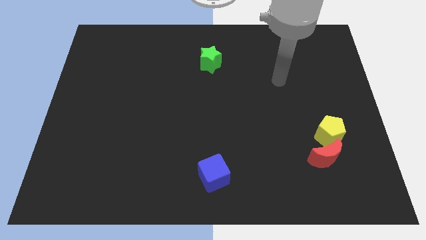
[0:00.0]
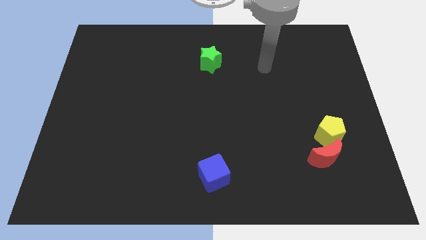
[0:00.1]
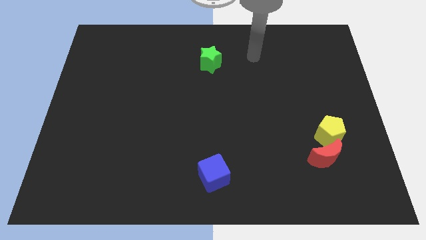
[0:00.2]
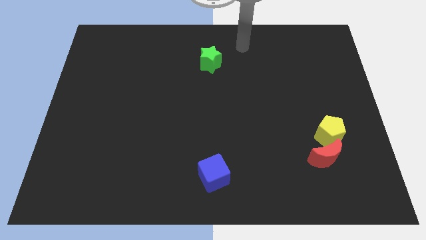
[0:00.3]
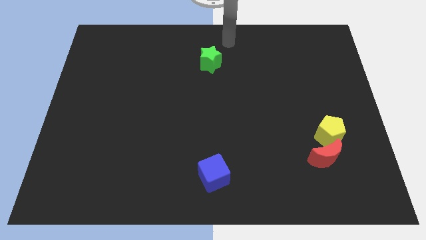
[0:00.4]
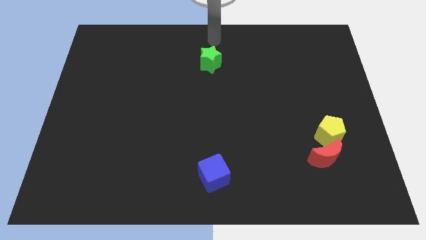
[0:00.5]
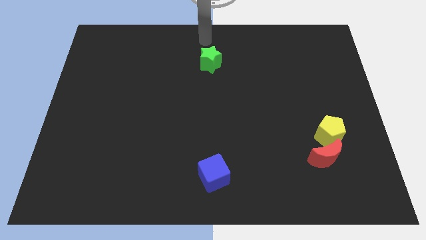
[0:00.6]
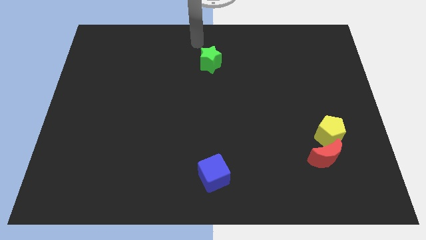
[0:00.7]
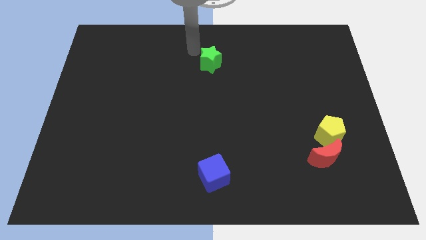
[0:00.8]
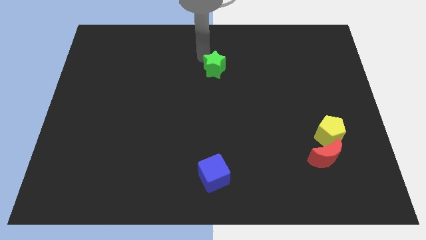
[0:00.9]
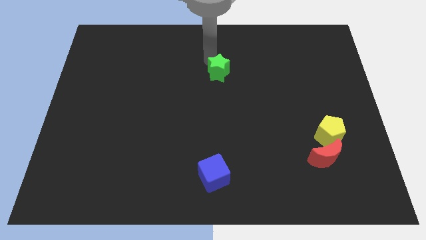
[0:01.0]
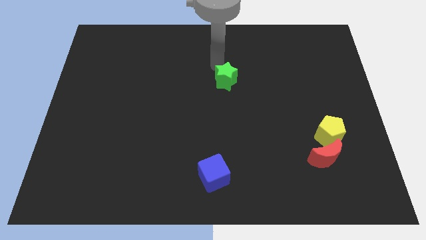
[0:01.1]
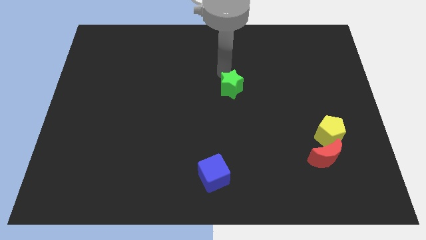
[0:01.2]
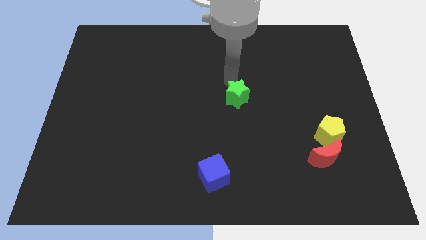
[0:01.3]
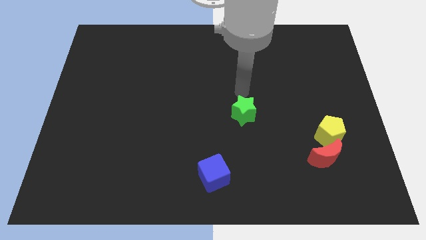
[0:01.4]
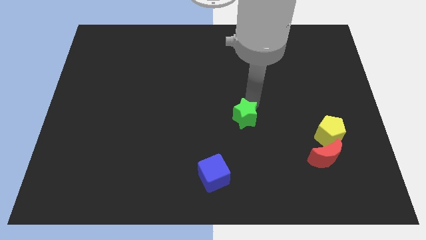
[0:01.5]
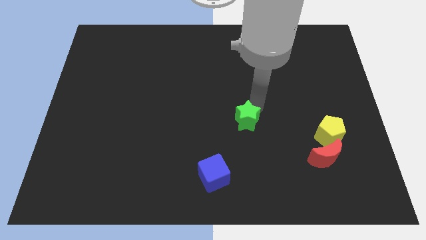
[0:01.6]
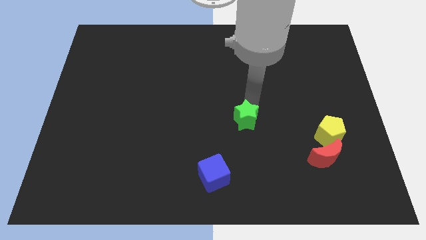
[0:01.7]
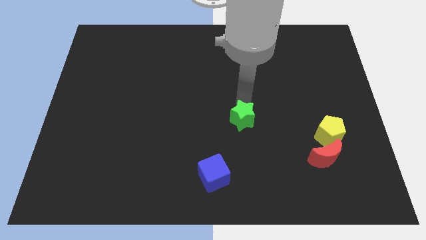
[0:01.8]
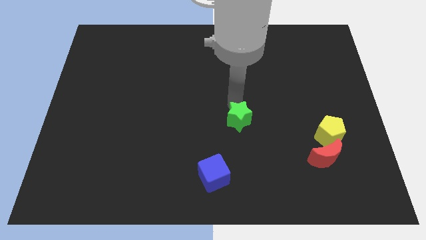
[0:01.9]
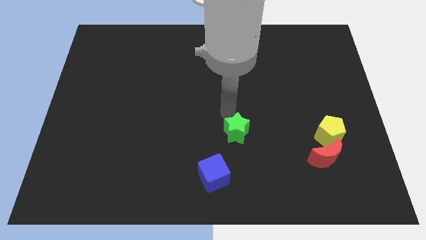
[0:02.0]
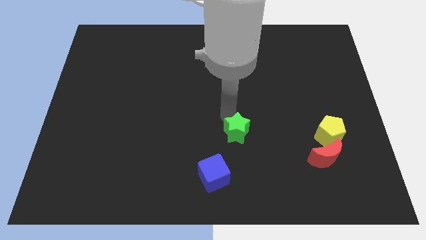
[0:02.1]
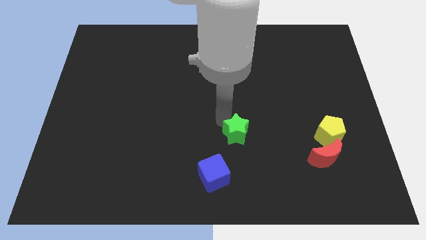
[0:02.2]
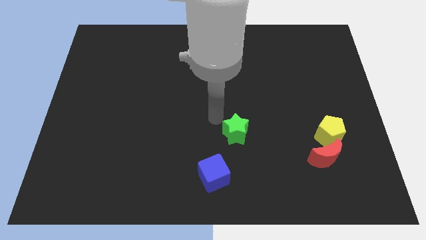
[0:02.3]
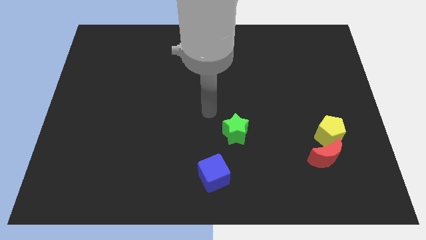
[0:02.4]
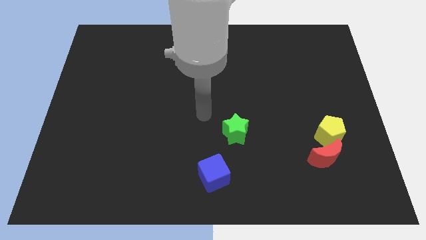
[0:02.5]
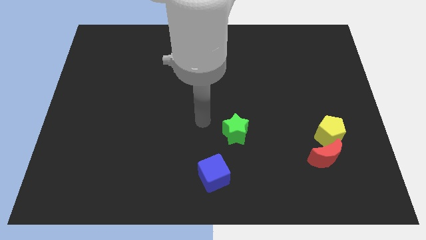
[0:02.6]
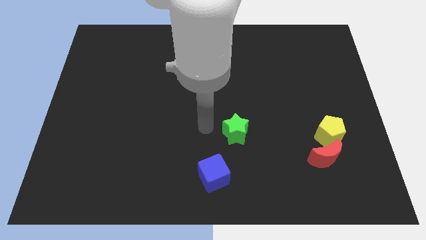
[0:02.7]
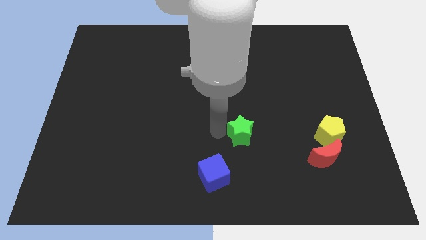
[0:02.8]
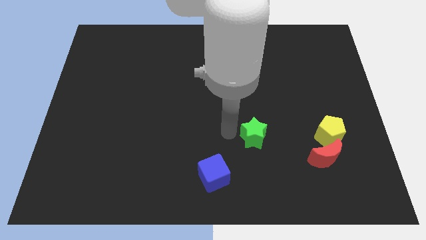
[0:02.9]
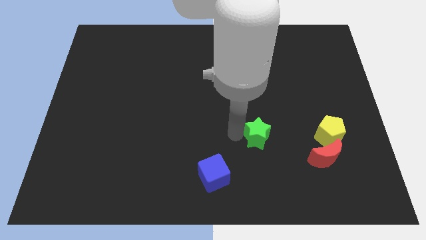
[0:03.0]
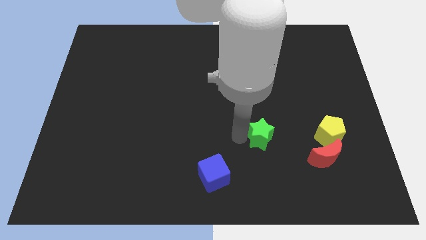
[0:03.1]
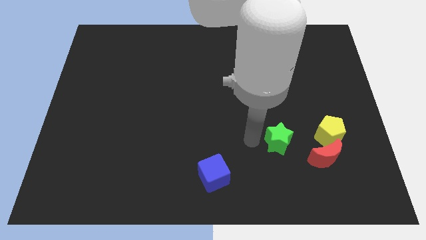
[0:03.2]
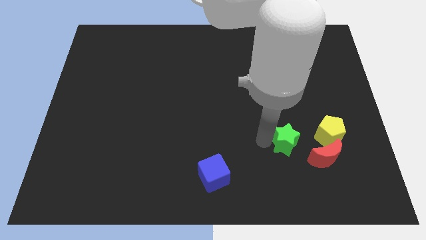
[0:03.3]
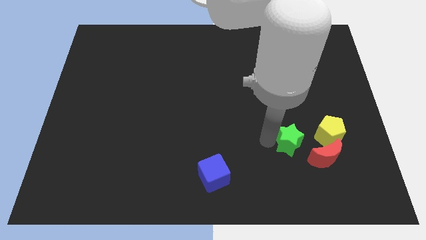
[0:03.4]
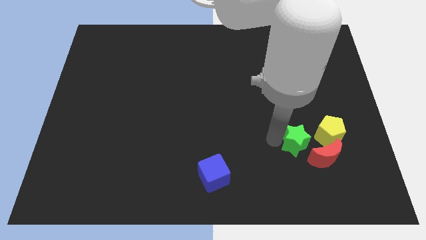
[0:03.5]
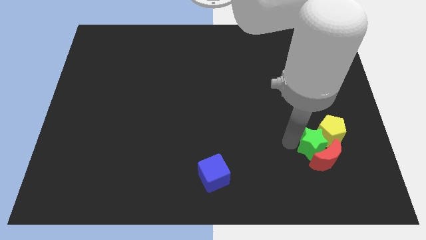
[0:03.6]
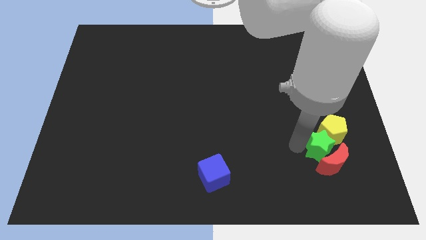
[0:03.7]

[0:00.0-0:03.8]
put the star next to the red moon

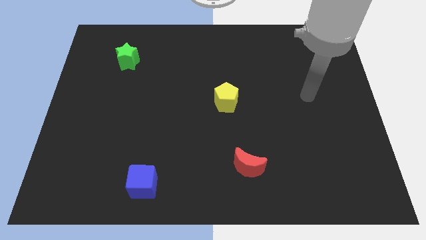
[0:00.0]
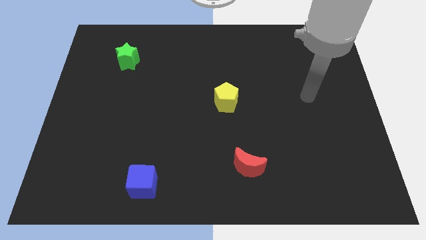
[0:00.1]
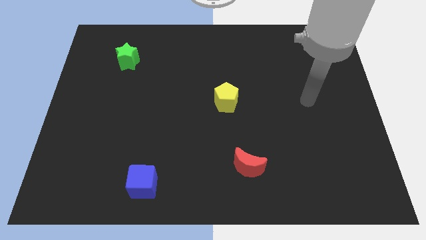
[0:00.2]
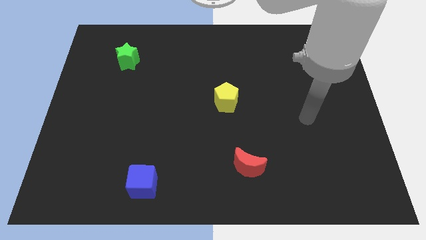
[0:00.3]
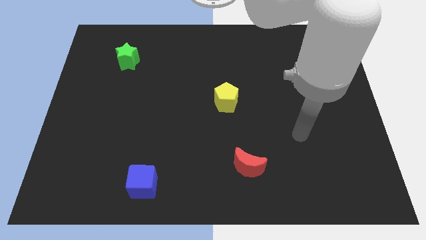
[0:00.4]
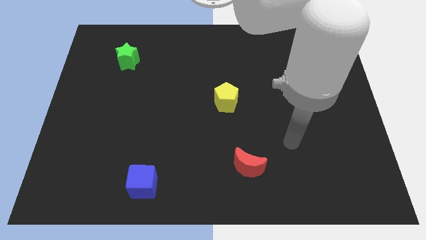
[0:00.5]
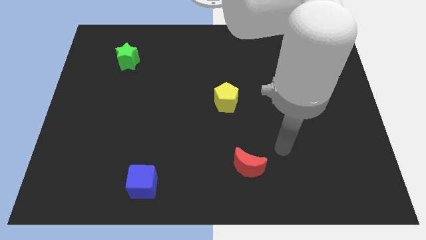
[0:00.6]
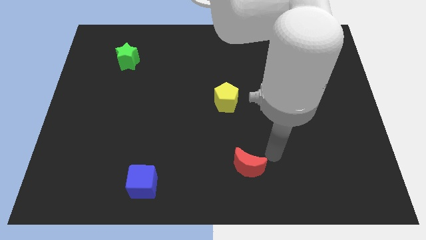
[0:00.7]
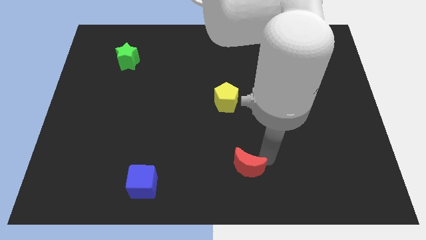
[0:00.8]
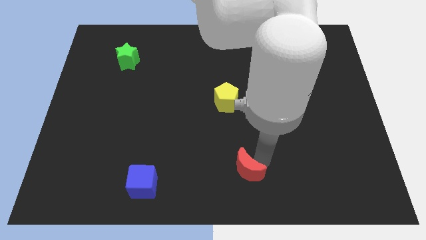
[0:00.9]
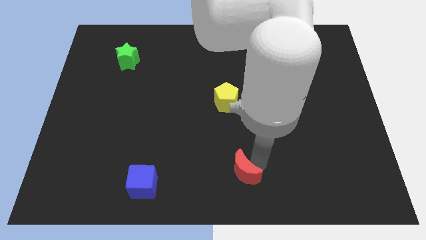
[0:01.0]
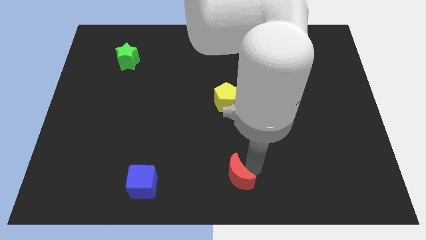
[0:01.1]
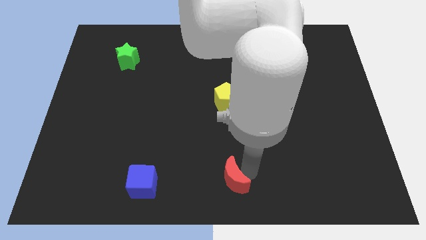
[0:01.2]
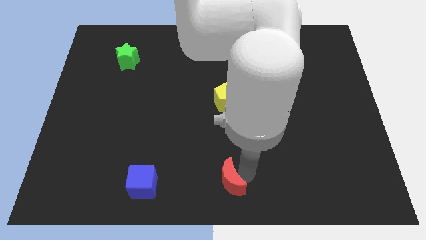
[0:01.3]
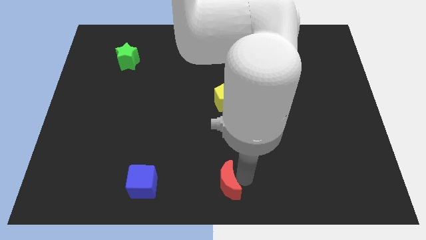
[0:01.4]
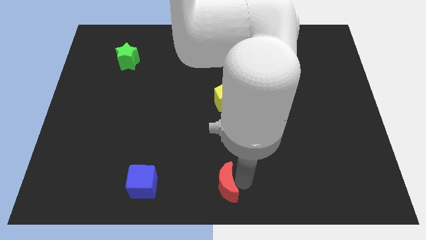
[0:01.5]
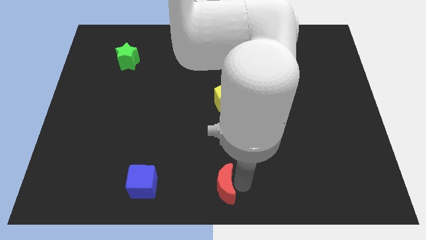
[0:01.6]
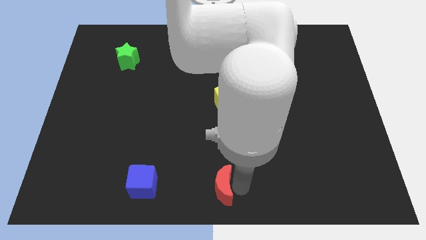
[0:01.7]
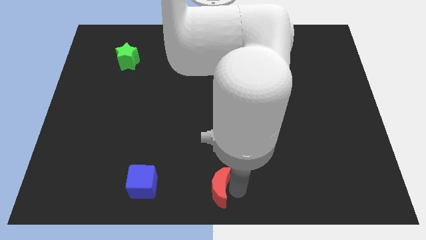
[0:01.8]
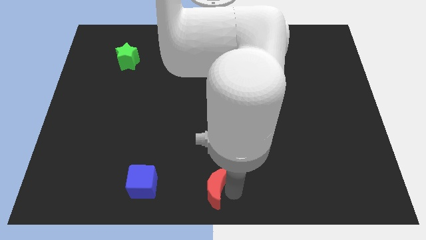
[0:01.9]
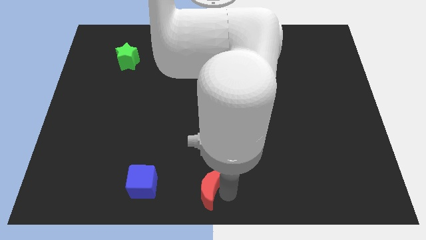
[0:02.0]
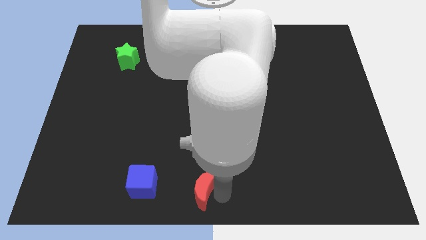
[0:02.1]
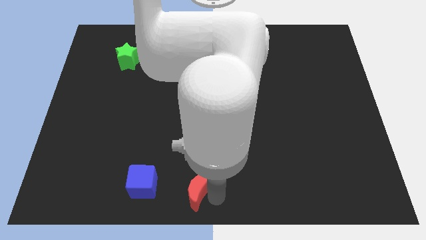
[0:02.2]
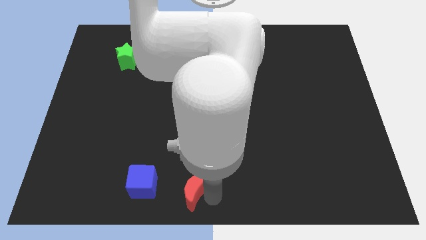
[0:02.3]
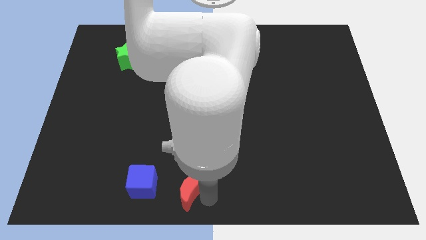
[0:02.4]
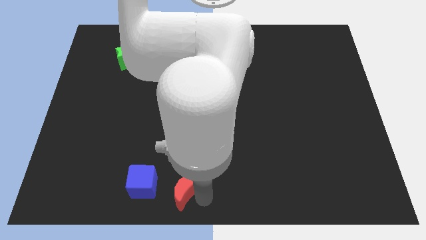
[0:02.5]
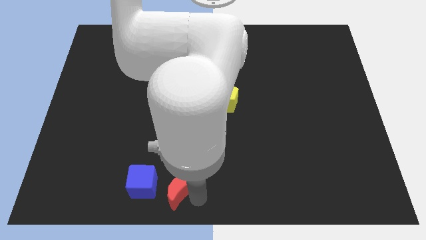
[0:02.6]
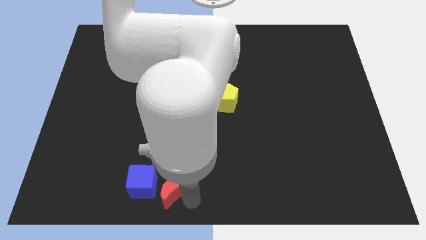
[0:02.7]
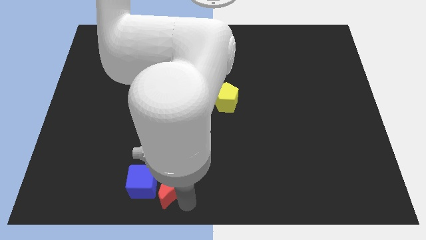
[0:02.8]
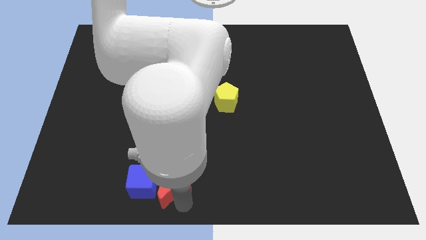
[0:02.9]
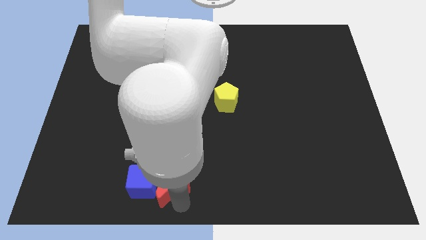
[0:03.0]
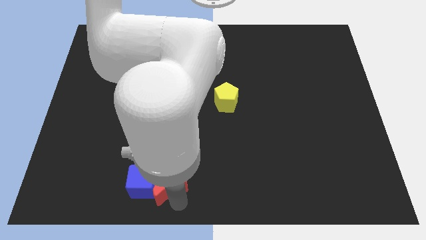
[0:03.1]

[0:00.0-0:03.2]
move the red block next to the blue cube

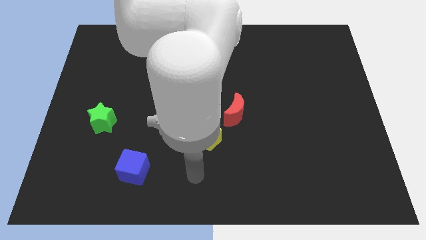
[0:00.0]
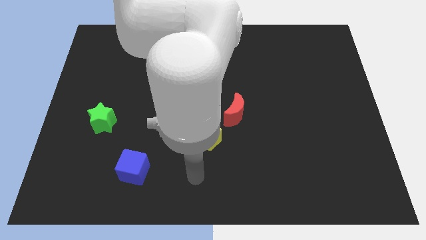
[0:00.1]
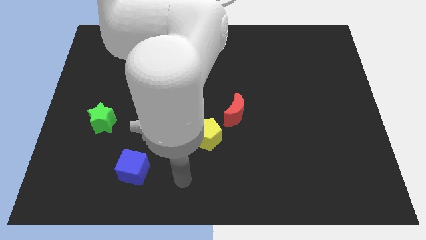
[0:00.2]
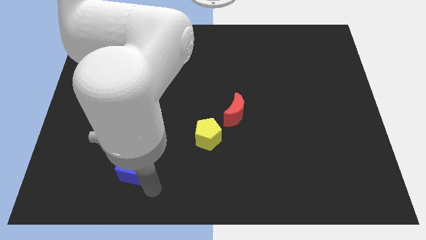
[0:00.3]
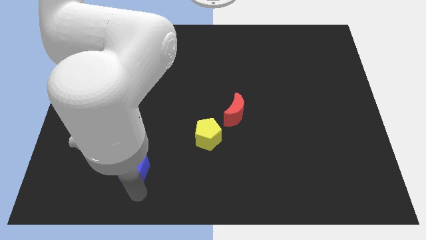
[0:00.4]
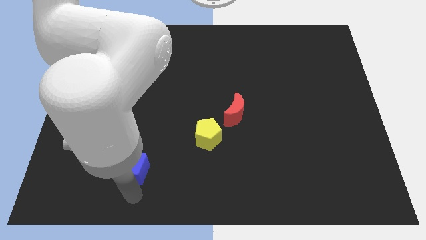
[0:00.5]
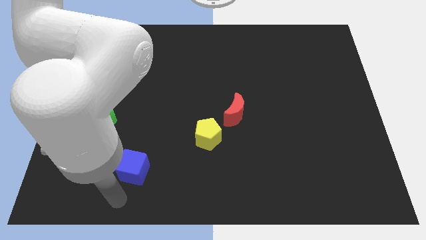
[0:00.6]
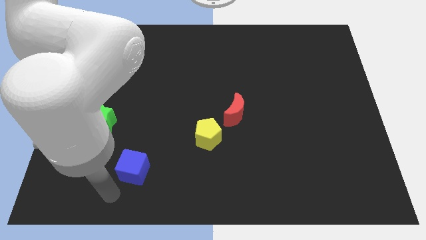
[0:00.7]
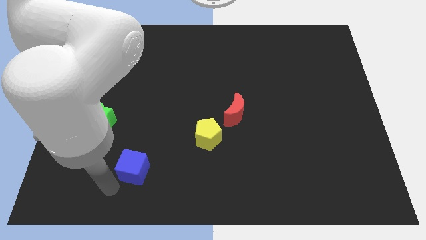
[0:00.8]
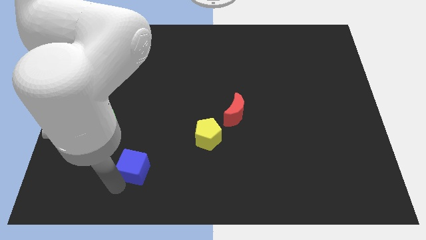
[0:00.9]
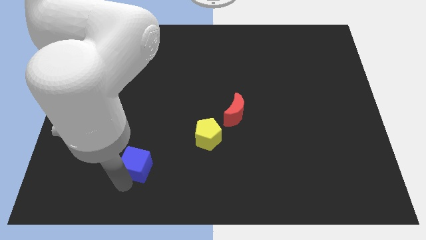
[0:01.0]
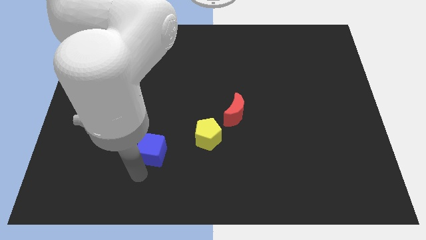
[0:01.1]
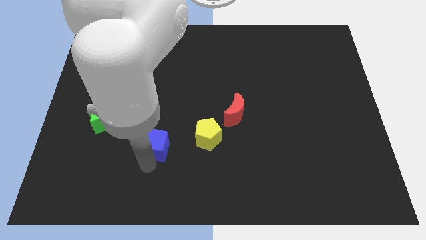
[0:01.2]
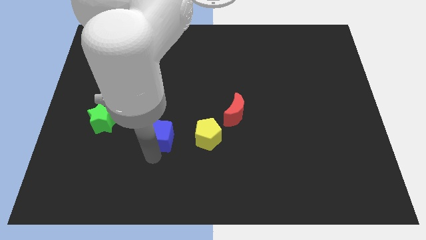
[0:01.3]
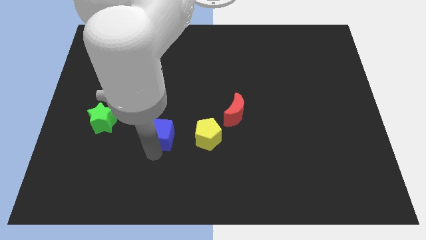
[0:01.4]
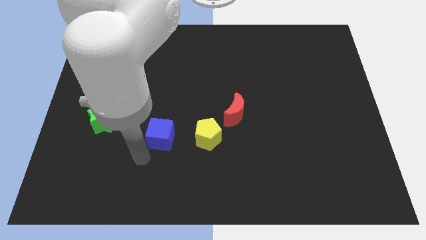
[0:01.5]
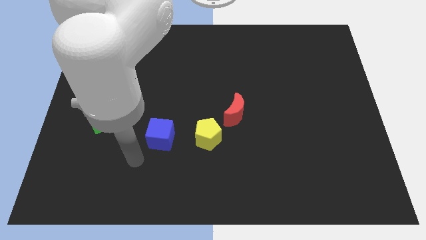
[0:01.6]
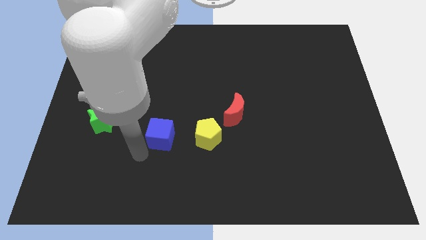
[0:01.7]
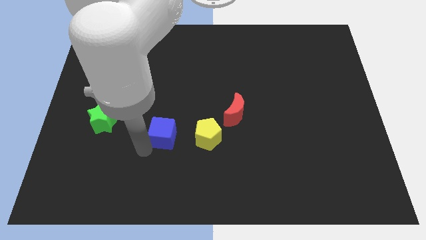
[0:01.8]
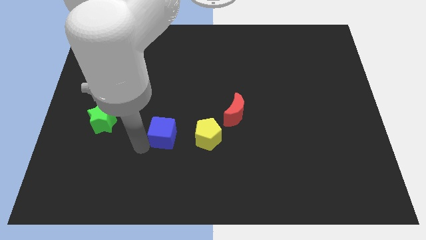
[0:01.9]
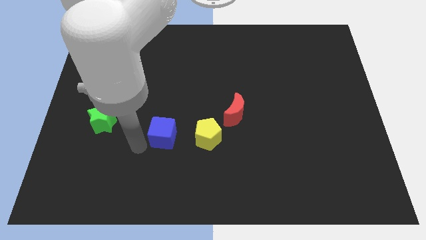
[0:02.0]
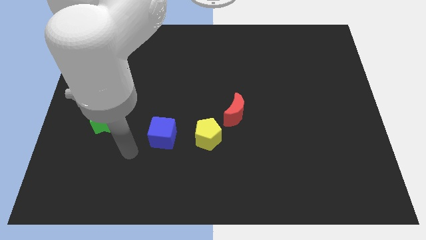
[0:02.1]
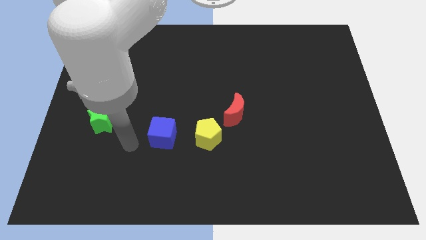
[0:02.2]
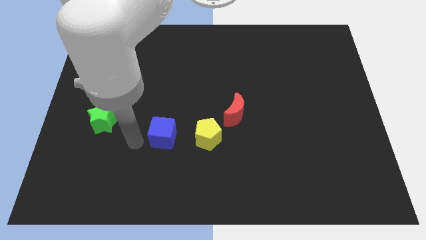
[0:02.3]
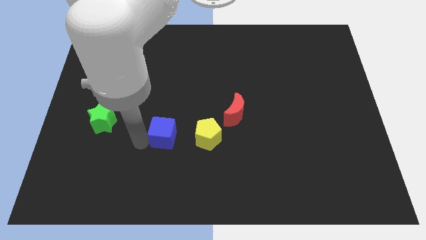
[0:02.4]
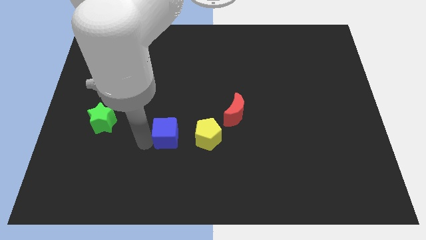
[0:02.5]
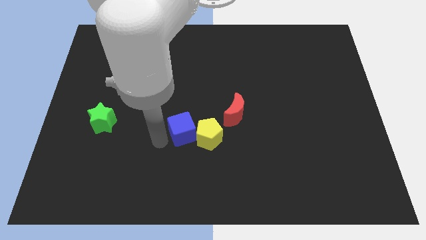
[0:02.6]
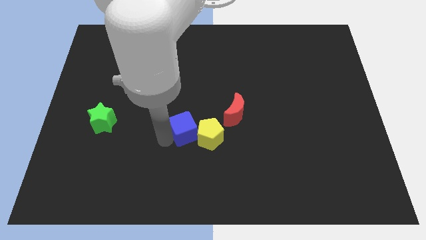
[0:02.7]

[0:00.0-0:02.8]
slide the blue cube close to the pentagon
